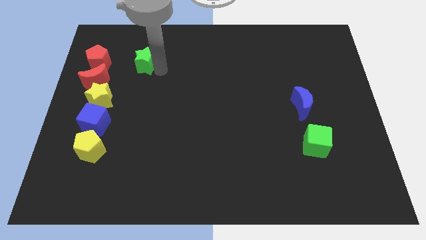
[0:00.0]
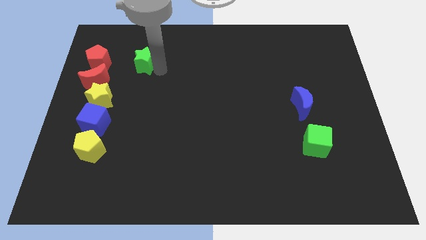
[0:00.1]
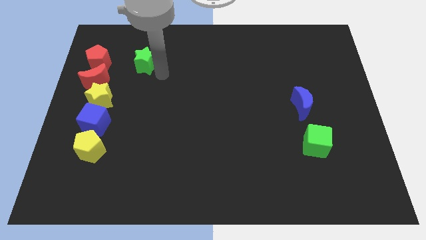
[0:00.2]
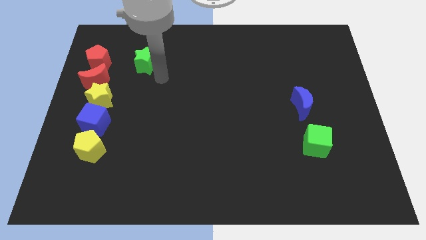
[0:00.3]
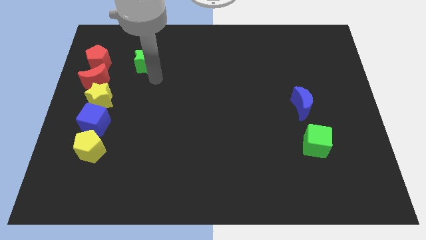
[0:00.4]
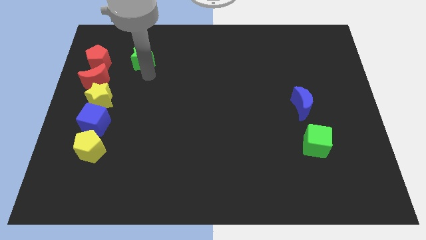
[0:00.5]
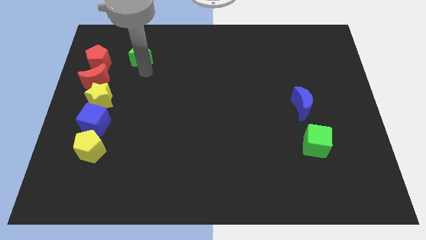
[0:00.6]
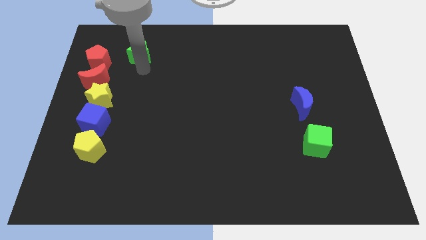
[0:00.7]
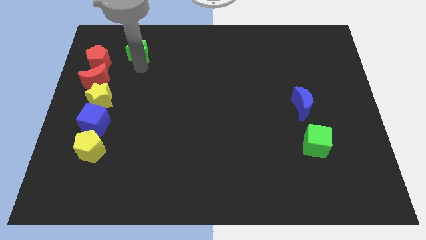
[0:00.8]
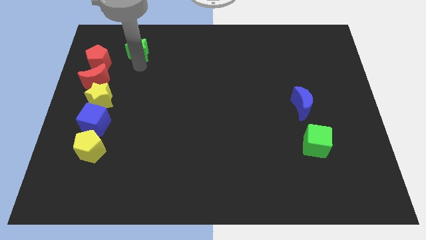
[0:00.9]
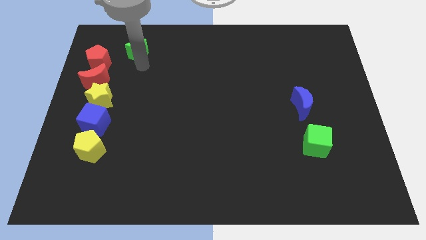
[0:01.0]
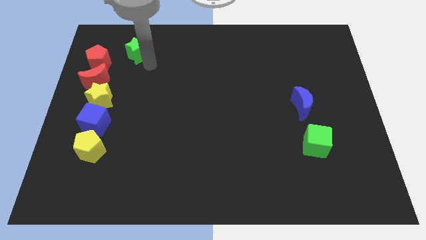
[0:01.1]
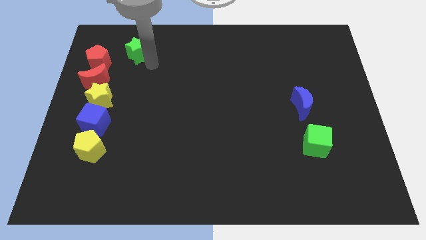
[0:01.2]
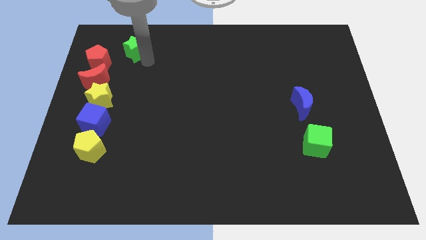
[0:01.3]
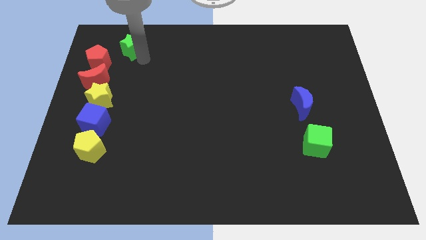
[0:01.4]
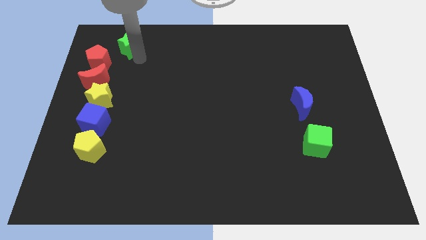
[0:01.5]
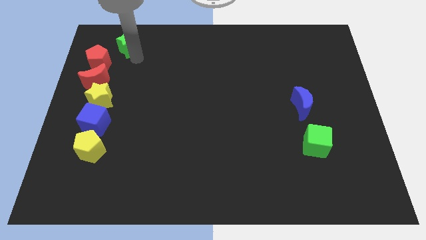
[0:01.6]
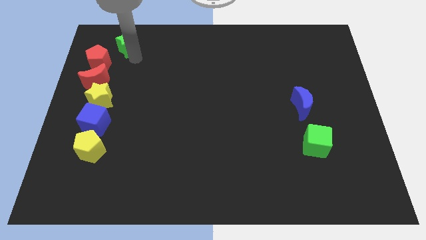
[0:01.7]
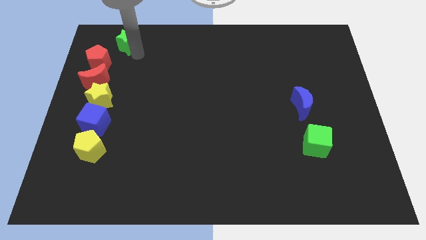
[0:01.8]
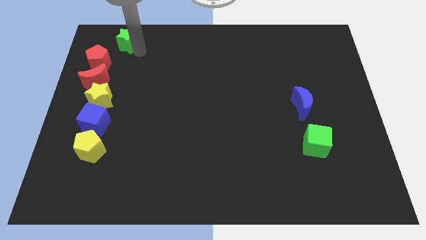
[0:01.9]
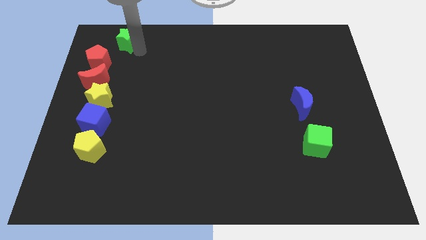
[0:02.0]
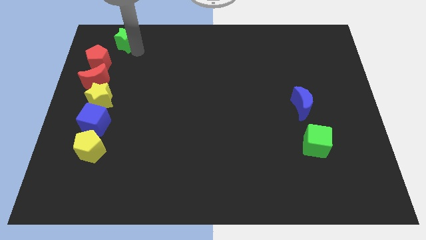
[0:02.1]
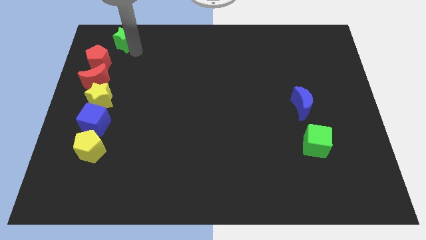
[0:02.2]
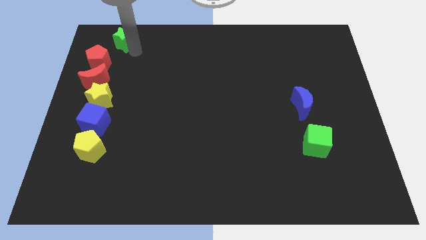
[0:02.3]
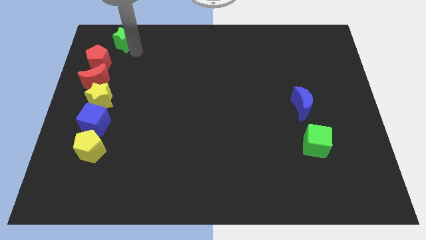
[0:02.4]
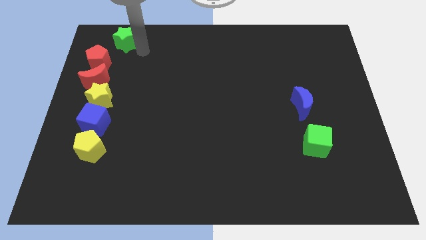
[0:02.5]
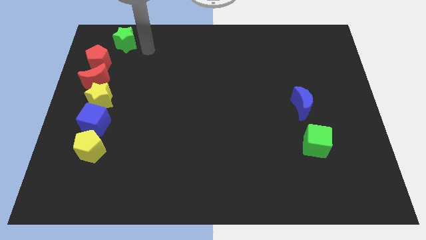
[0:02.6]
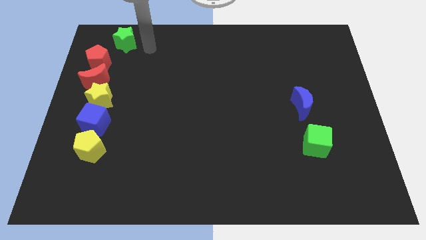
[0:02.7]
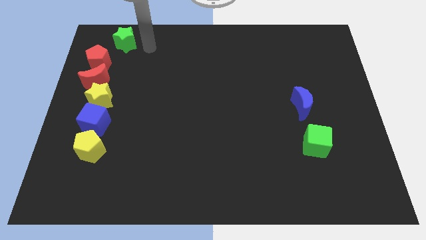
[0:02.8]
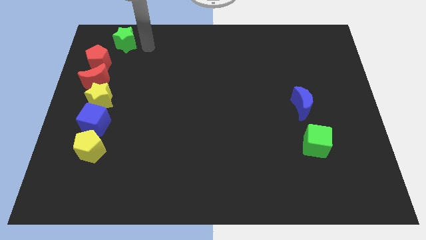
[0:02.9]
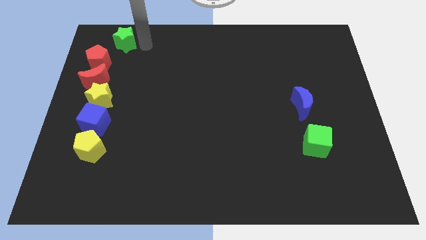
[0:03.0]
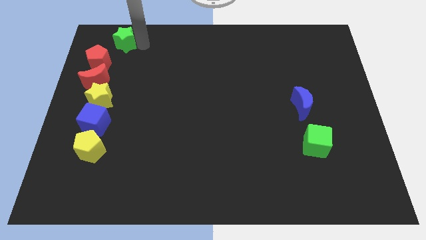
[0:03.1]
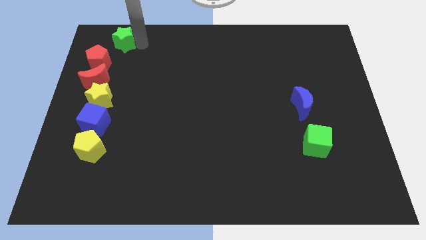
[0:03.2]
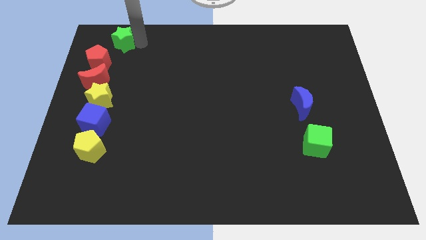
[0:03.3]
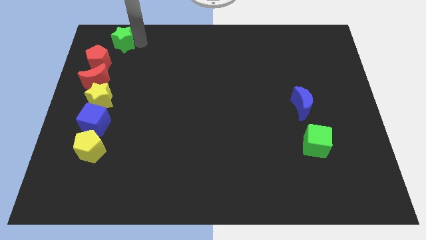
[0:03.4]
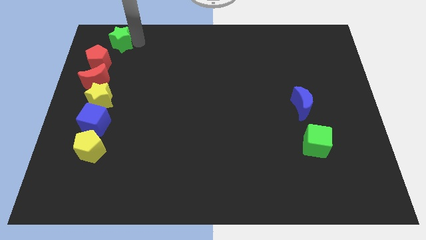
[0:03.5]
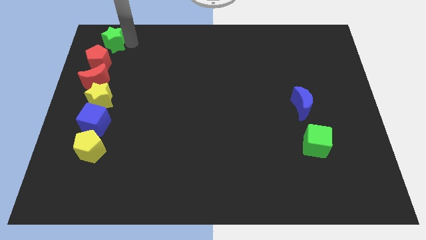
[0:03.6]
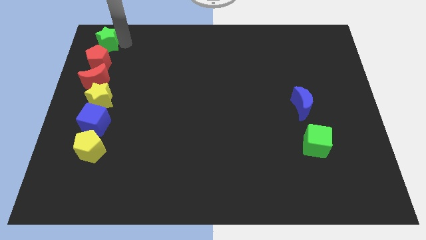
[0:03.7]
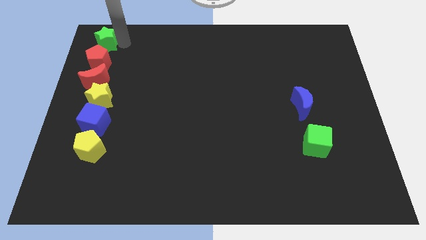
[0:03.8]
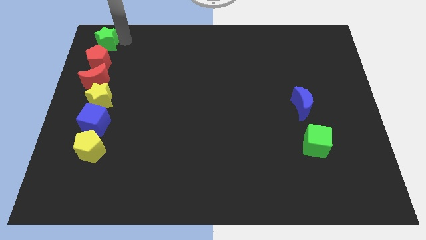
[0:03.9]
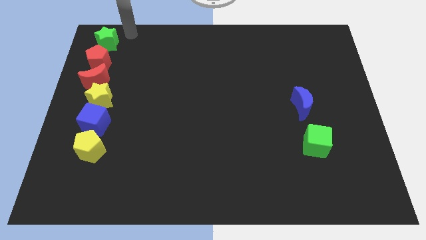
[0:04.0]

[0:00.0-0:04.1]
place the green star above the red pentagon

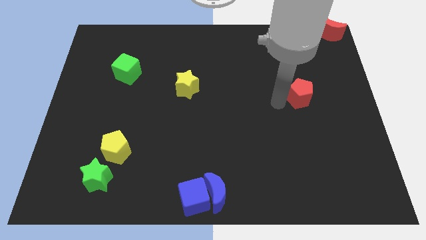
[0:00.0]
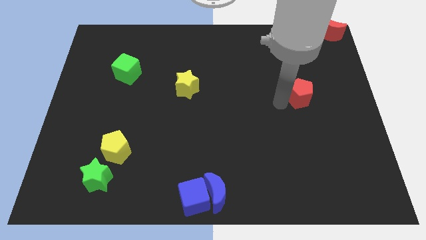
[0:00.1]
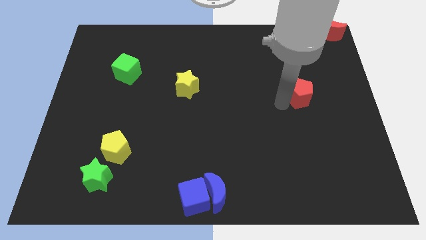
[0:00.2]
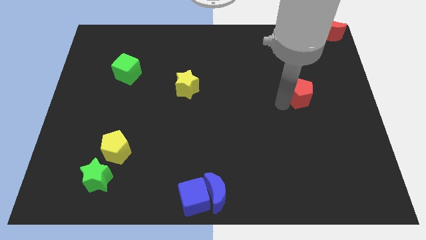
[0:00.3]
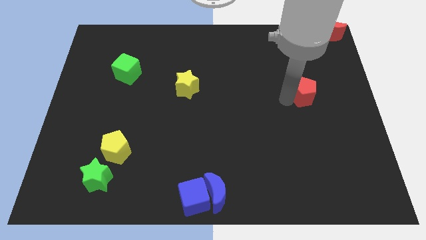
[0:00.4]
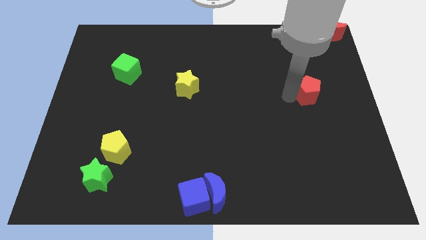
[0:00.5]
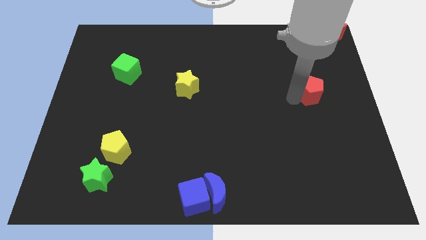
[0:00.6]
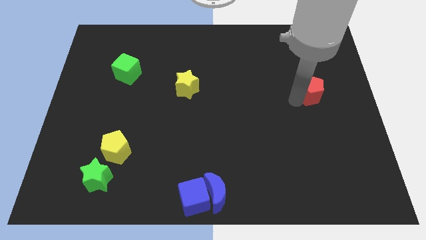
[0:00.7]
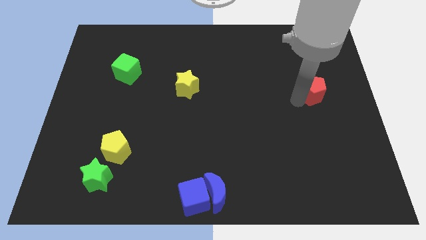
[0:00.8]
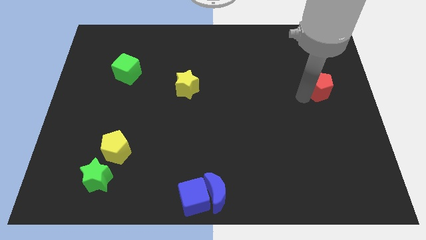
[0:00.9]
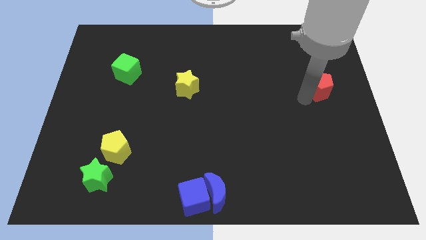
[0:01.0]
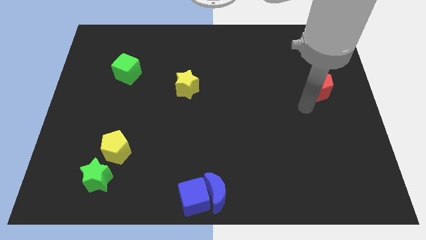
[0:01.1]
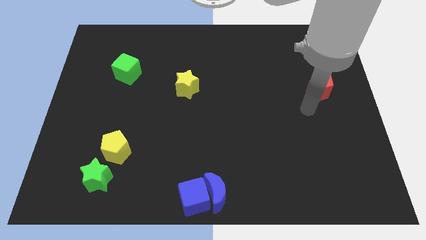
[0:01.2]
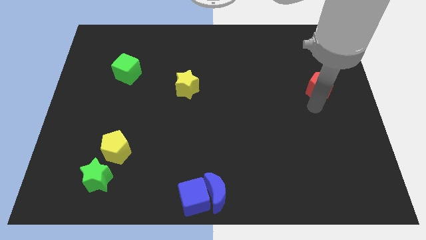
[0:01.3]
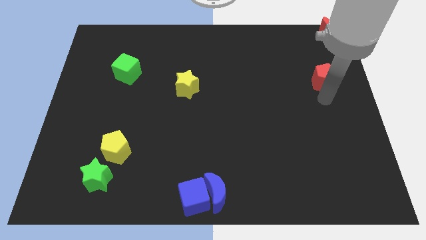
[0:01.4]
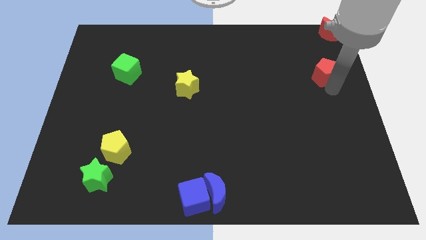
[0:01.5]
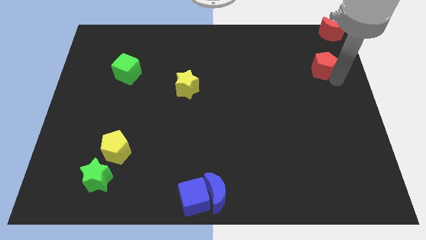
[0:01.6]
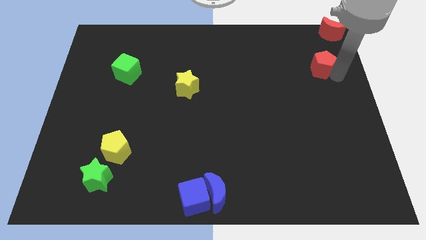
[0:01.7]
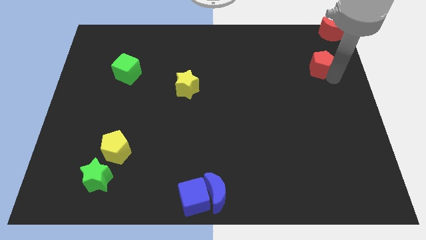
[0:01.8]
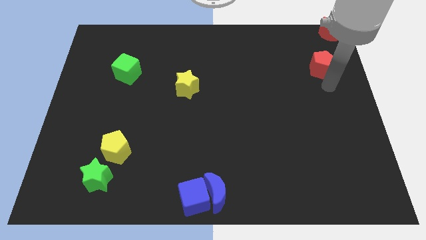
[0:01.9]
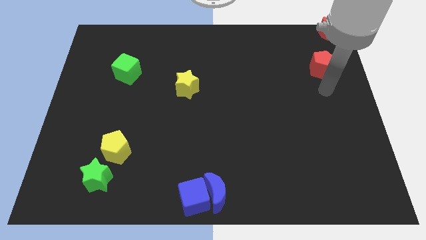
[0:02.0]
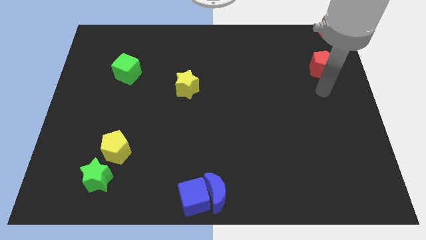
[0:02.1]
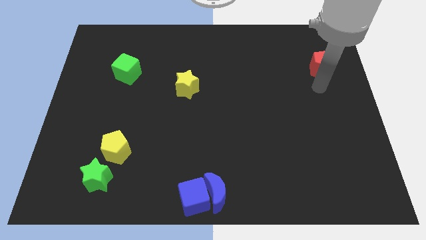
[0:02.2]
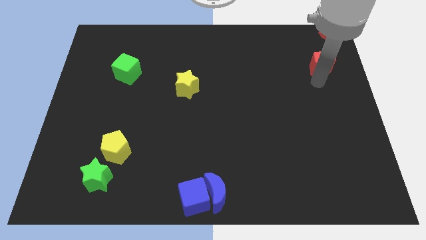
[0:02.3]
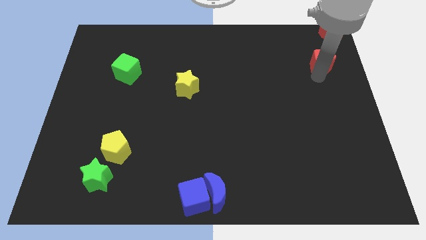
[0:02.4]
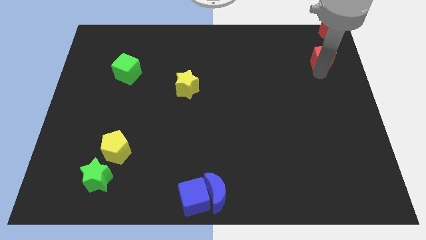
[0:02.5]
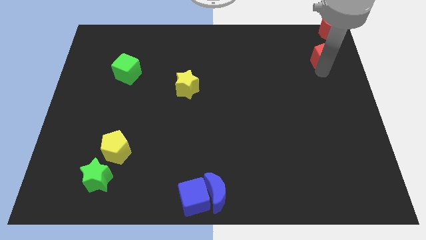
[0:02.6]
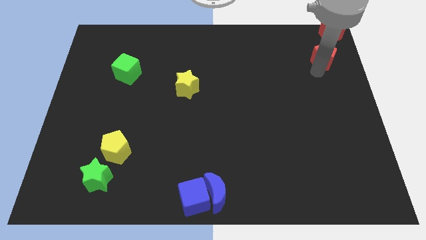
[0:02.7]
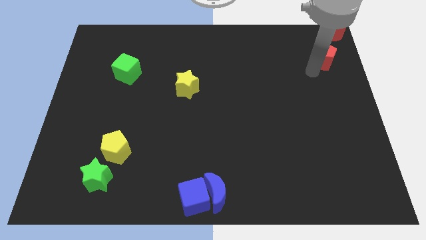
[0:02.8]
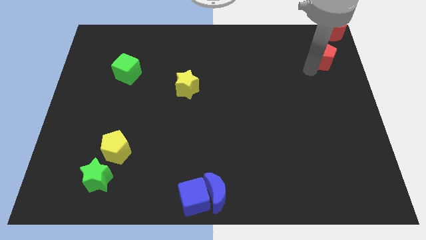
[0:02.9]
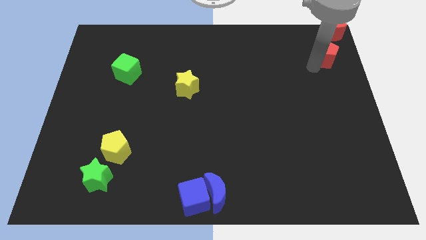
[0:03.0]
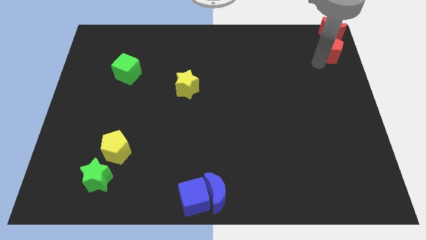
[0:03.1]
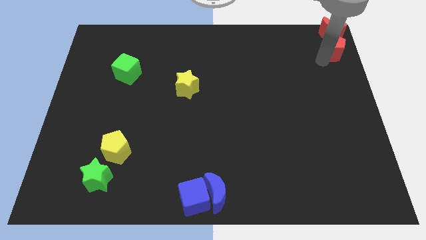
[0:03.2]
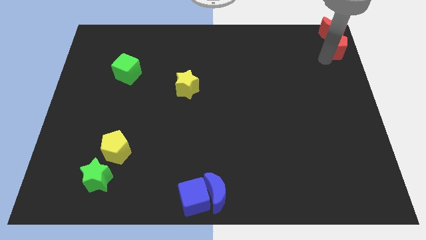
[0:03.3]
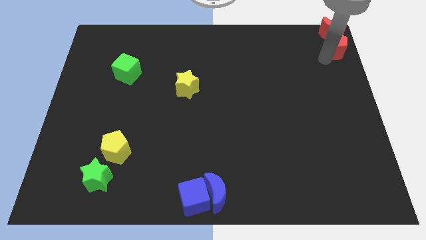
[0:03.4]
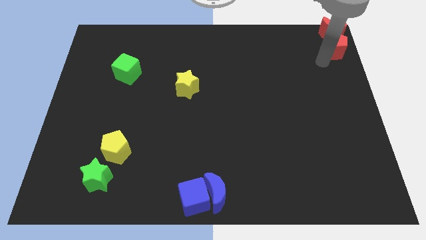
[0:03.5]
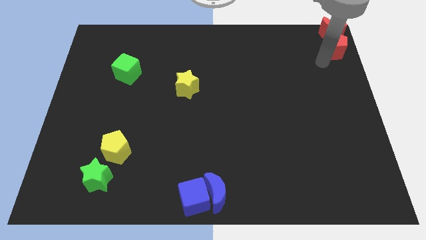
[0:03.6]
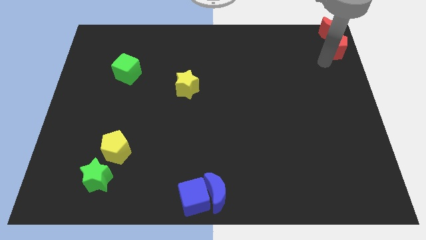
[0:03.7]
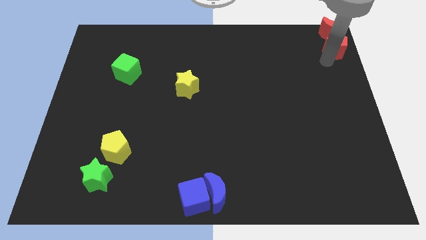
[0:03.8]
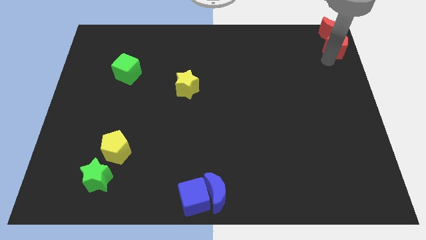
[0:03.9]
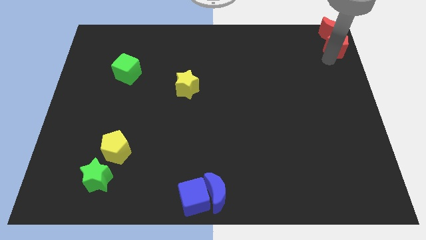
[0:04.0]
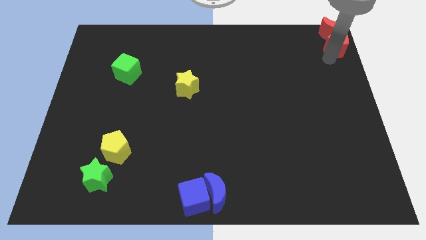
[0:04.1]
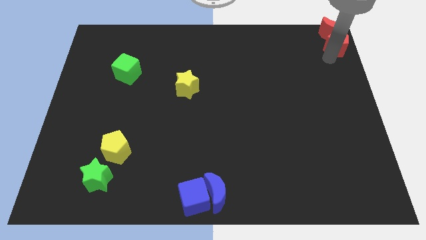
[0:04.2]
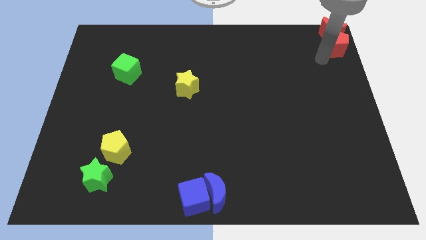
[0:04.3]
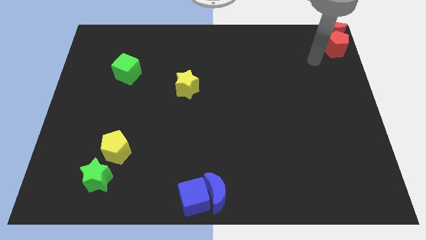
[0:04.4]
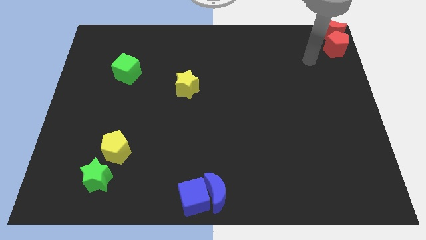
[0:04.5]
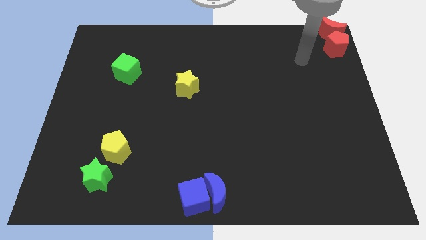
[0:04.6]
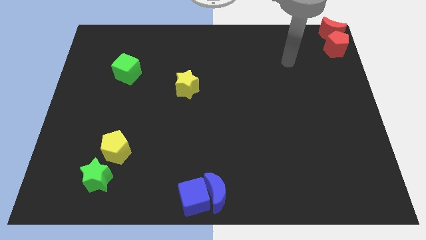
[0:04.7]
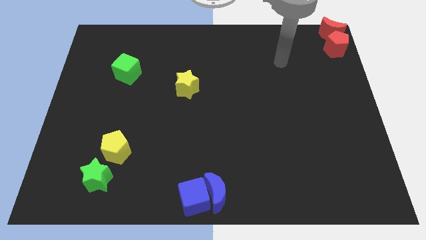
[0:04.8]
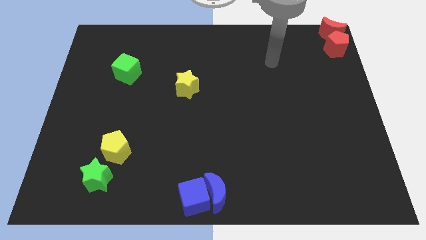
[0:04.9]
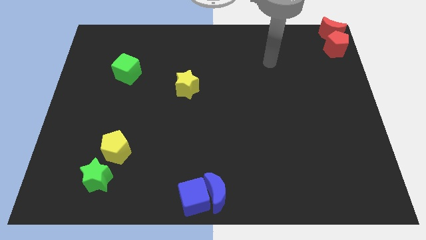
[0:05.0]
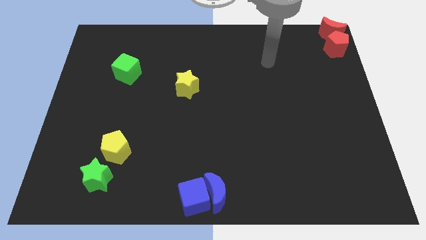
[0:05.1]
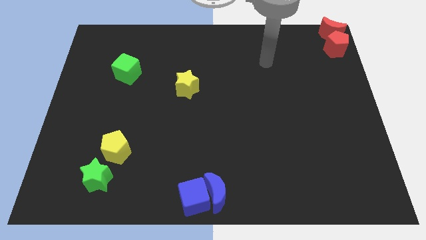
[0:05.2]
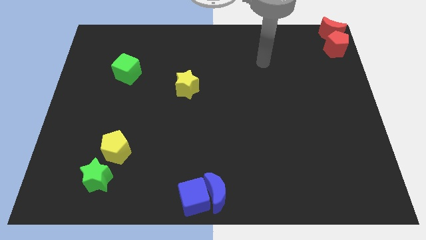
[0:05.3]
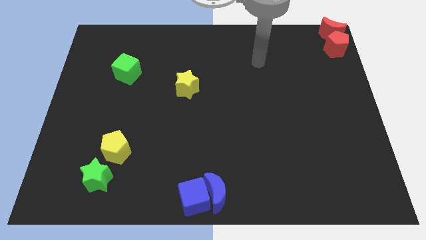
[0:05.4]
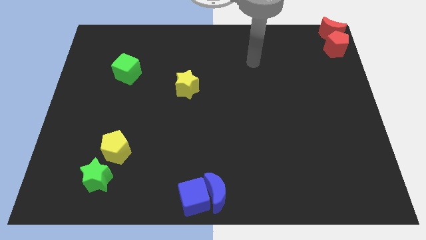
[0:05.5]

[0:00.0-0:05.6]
push the red pentagon into the red crescent
